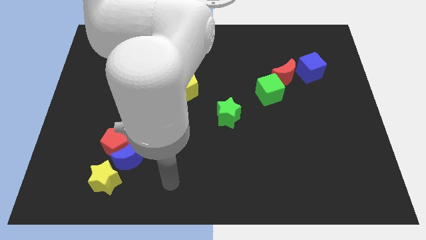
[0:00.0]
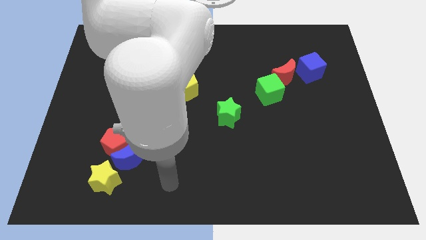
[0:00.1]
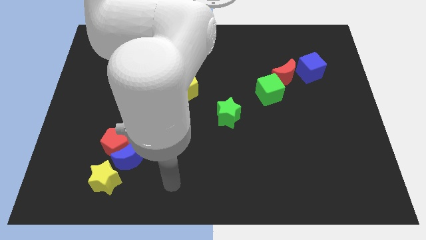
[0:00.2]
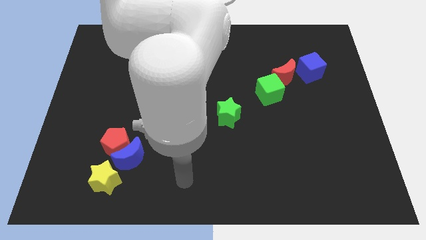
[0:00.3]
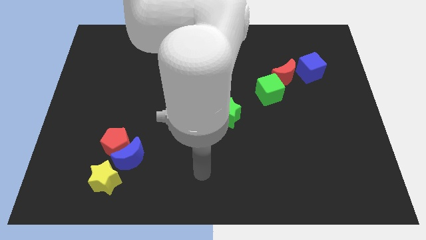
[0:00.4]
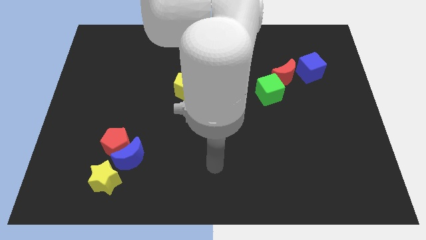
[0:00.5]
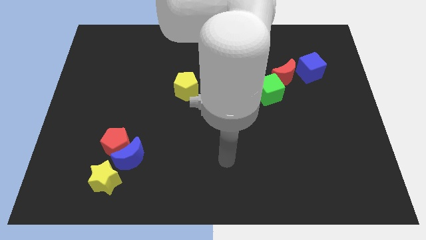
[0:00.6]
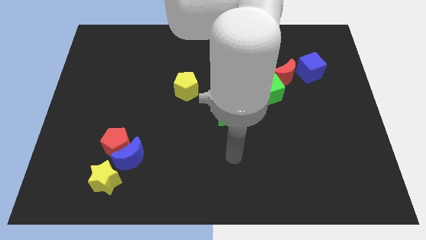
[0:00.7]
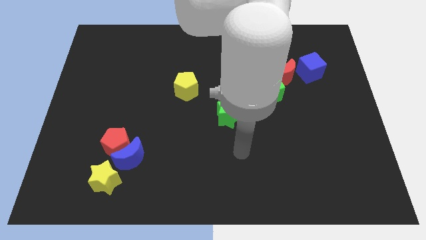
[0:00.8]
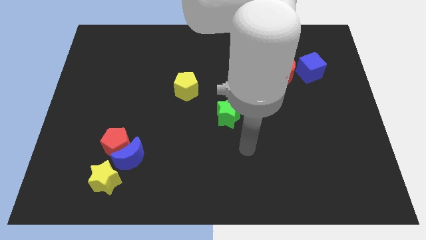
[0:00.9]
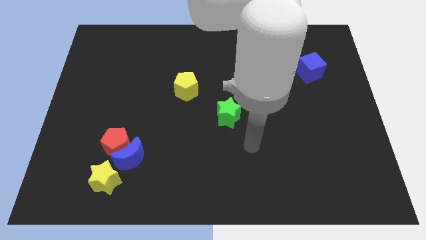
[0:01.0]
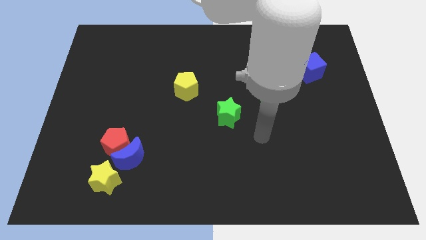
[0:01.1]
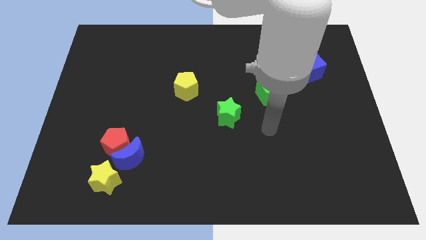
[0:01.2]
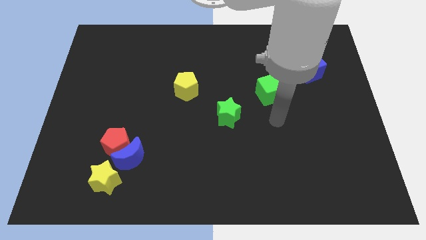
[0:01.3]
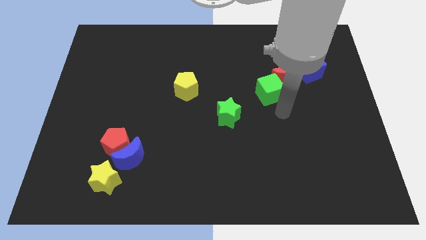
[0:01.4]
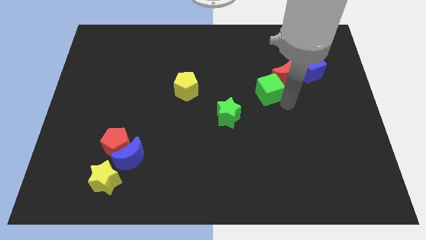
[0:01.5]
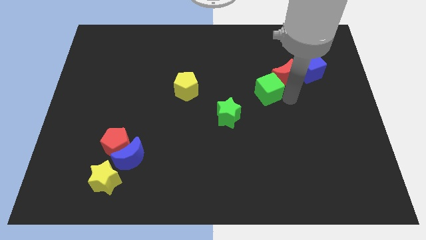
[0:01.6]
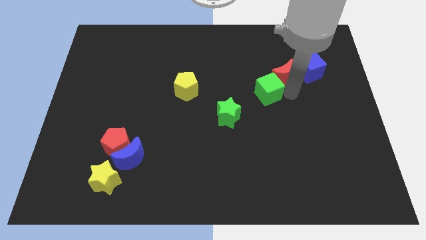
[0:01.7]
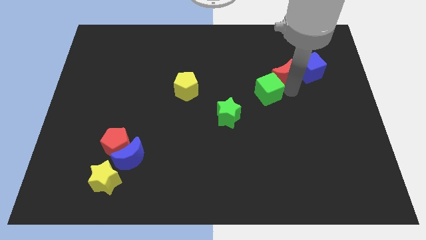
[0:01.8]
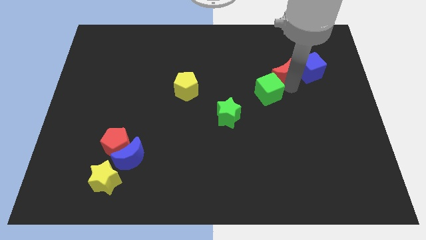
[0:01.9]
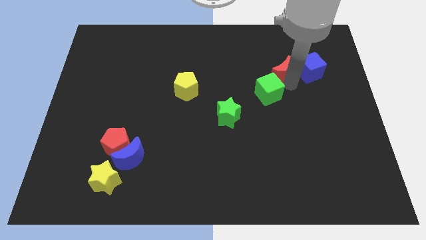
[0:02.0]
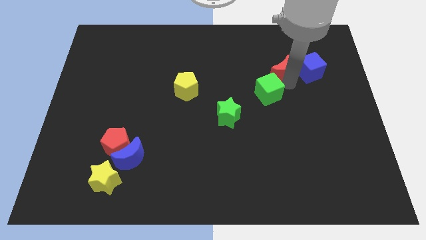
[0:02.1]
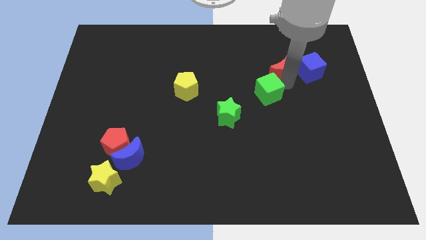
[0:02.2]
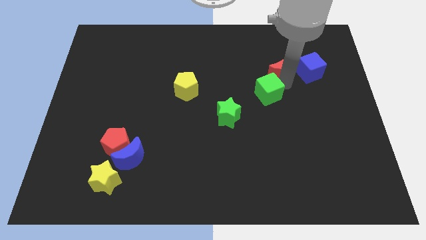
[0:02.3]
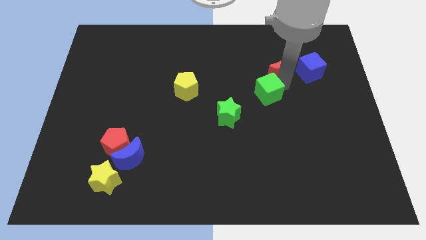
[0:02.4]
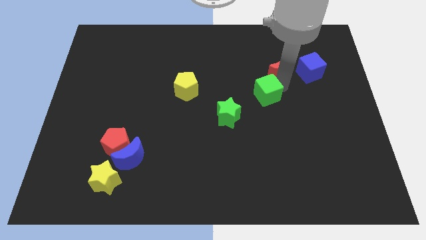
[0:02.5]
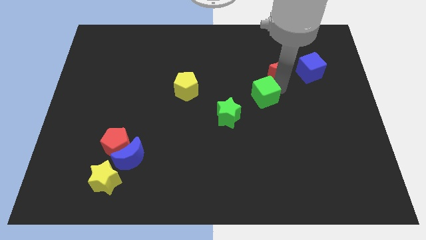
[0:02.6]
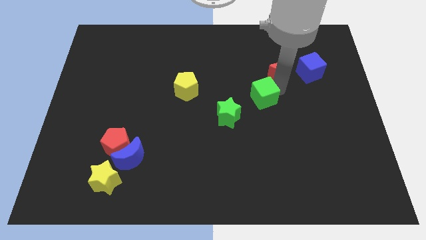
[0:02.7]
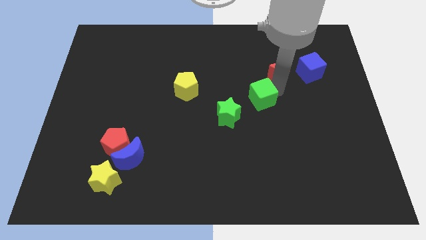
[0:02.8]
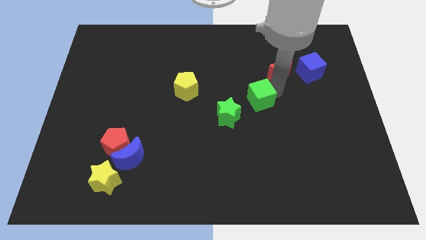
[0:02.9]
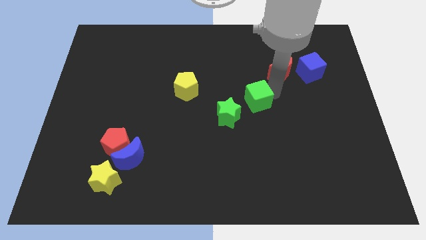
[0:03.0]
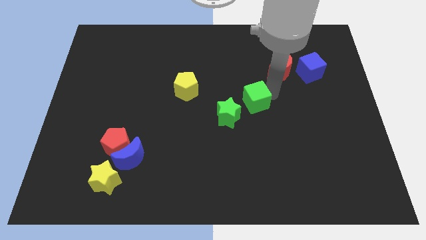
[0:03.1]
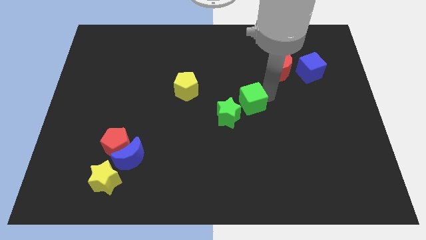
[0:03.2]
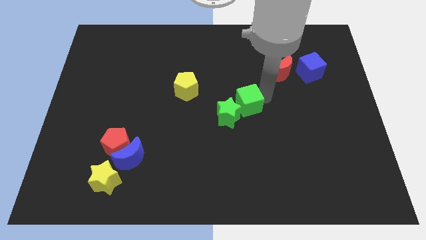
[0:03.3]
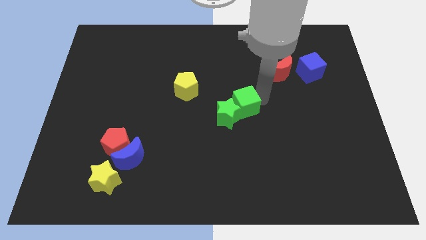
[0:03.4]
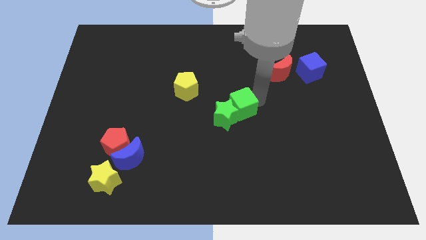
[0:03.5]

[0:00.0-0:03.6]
move the green cube close to the green star

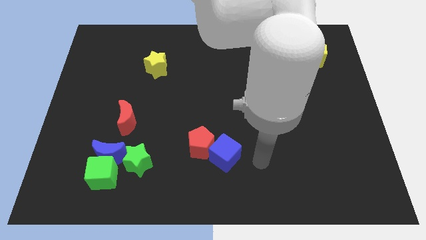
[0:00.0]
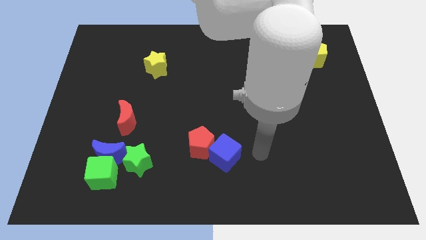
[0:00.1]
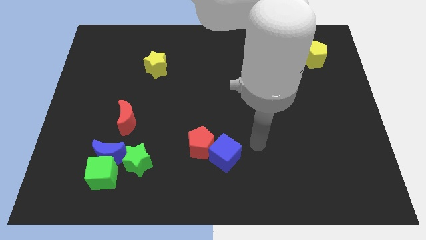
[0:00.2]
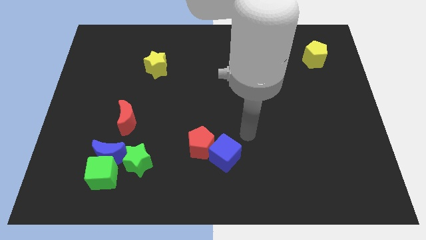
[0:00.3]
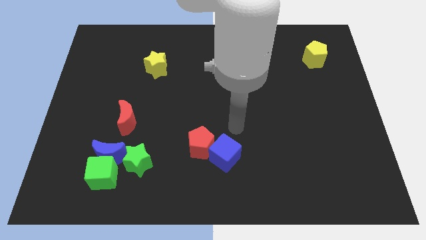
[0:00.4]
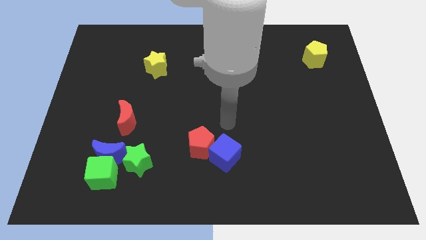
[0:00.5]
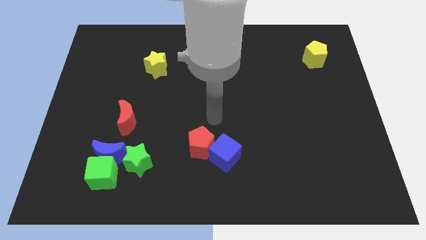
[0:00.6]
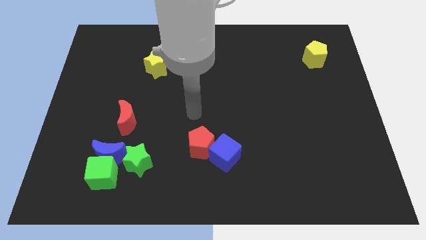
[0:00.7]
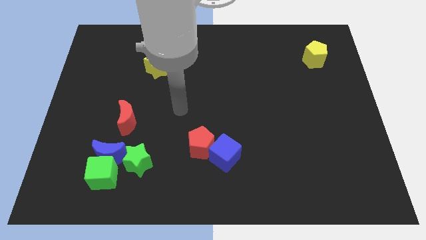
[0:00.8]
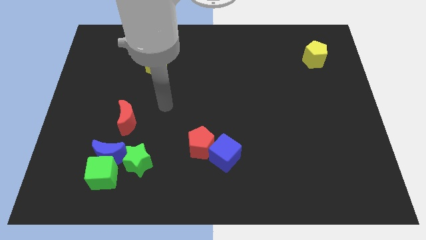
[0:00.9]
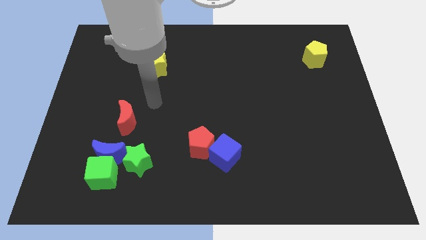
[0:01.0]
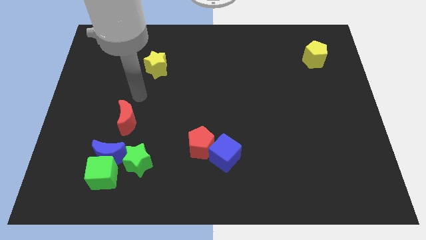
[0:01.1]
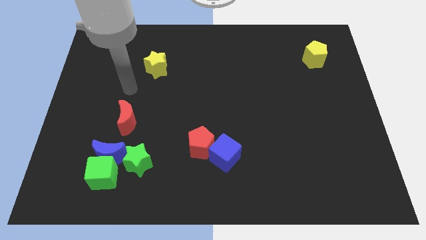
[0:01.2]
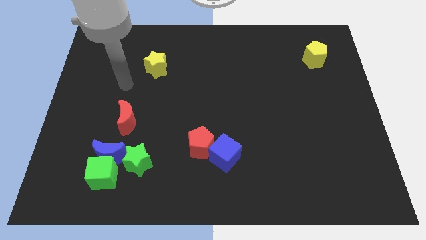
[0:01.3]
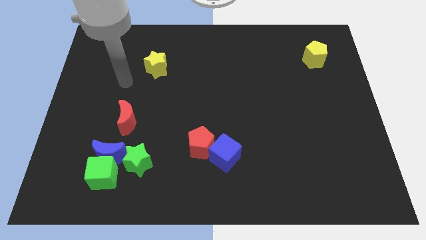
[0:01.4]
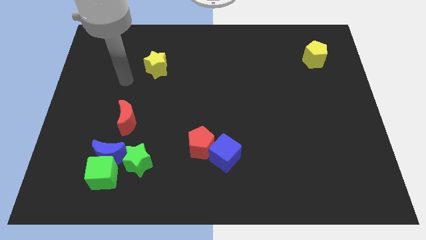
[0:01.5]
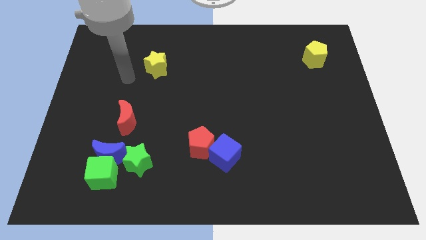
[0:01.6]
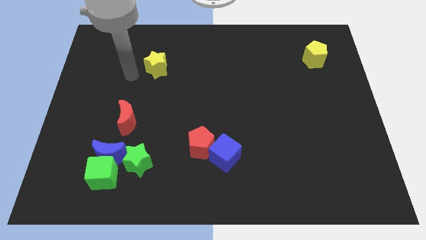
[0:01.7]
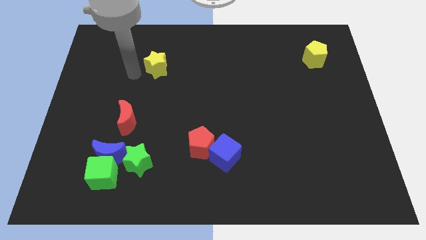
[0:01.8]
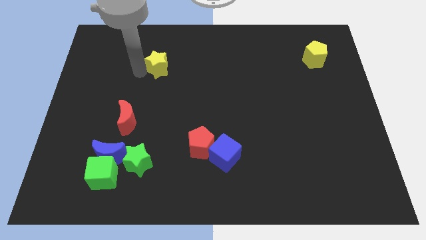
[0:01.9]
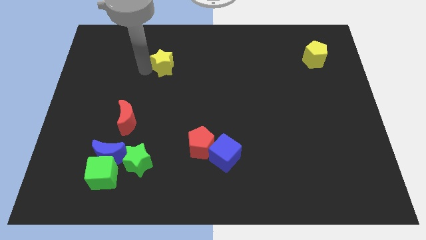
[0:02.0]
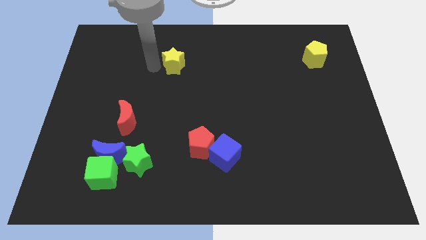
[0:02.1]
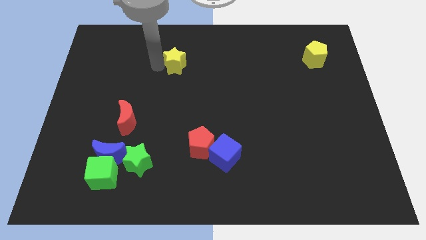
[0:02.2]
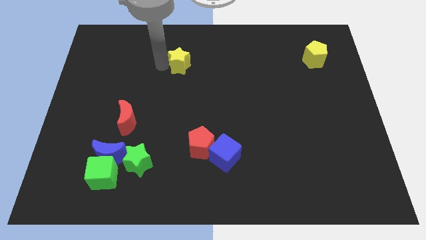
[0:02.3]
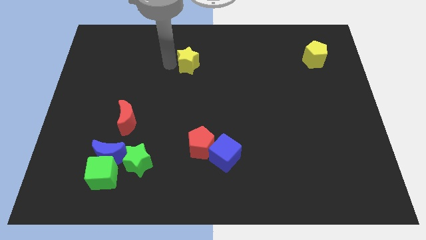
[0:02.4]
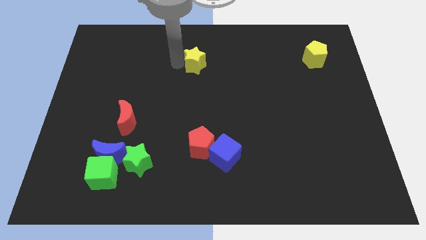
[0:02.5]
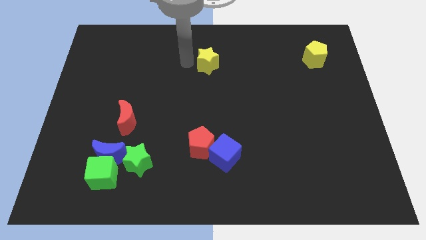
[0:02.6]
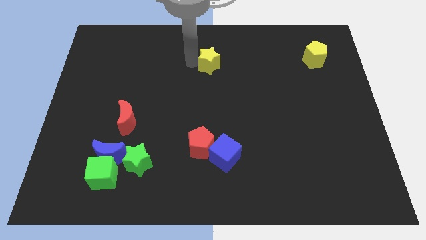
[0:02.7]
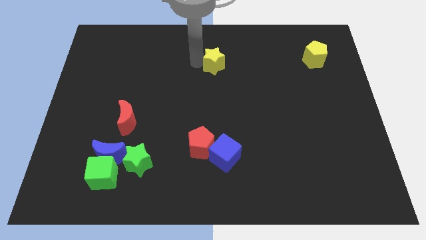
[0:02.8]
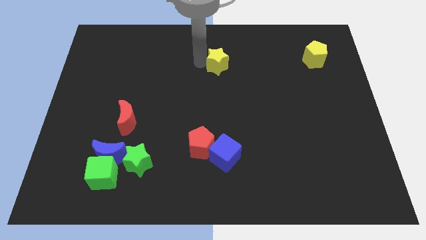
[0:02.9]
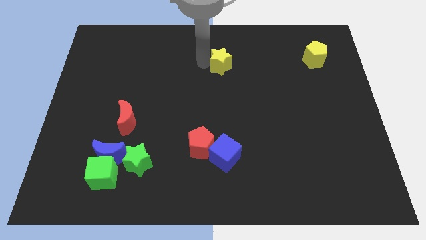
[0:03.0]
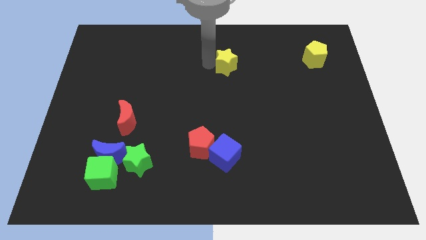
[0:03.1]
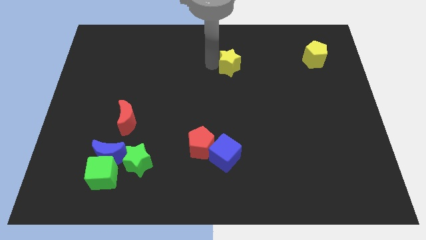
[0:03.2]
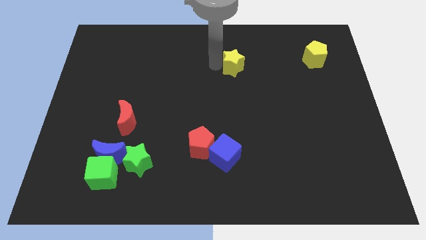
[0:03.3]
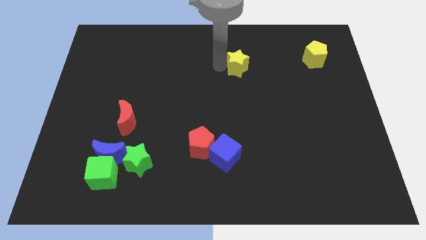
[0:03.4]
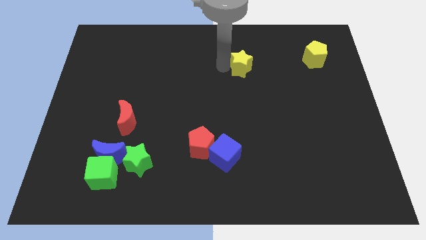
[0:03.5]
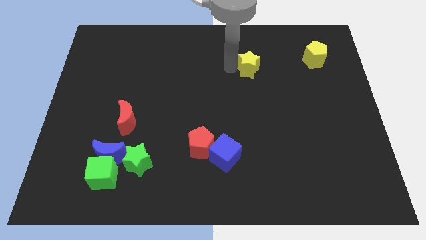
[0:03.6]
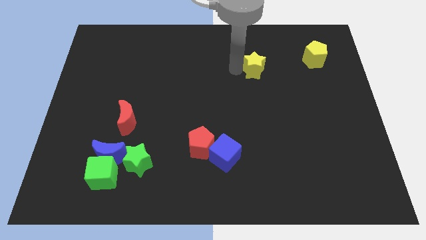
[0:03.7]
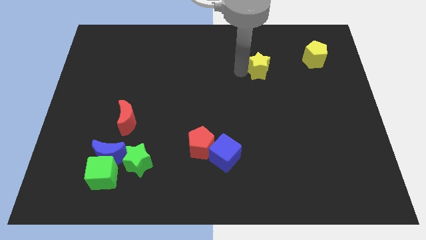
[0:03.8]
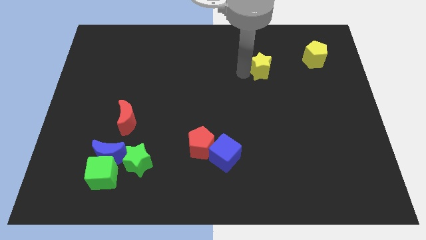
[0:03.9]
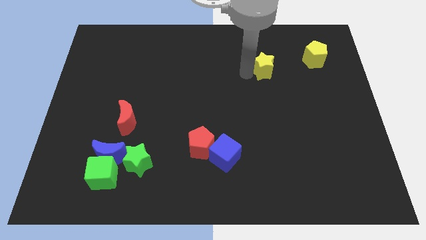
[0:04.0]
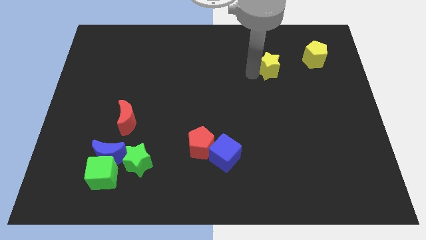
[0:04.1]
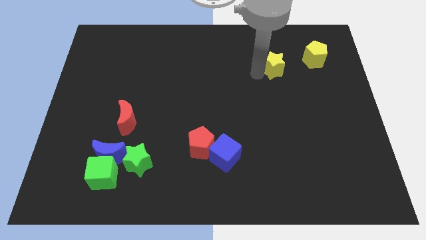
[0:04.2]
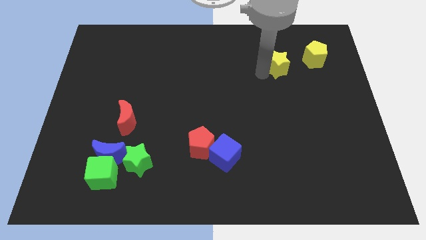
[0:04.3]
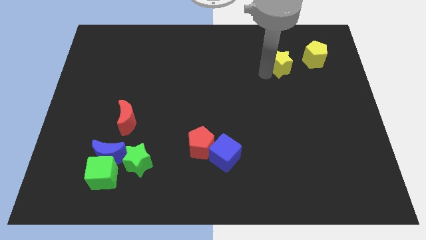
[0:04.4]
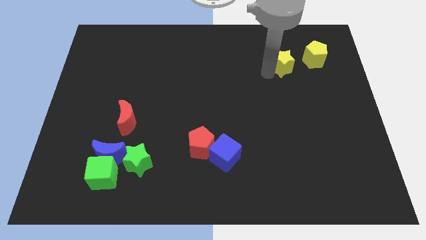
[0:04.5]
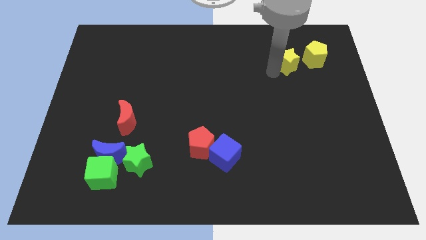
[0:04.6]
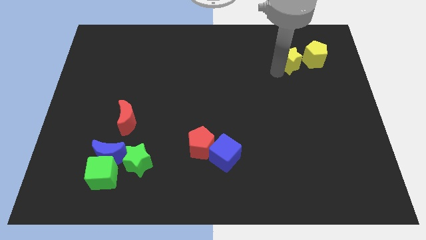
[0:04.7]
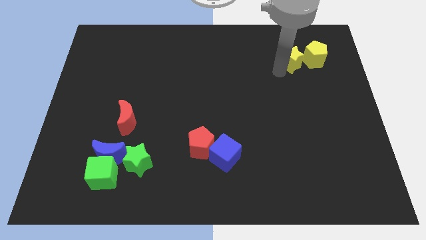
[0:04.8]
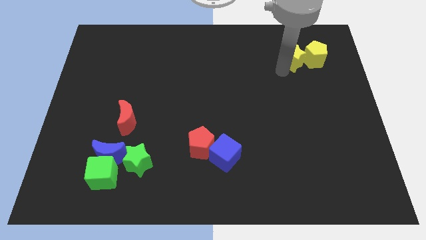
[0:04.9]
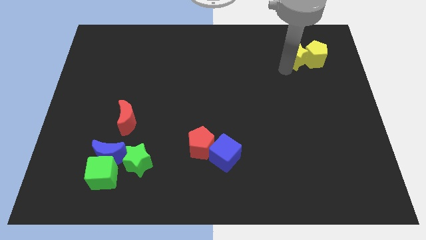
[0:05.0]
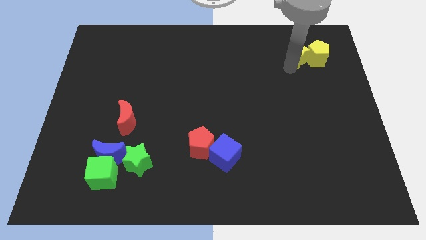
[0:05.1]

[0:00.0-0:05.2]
push the yellow star towards the yellow pentagon
